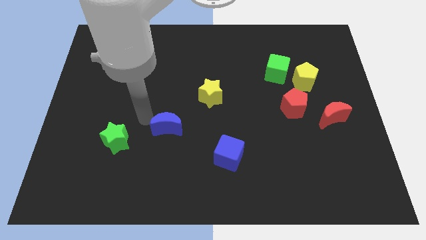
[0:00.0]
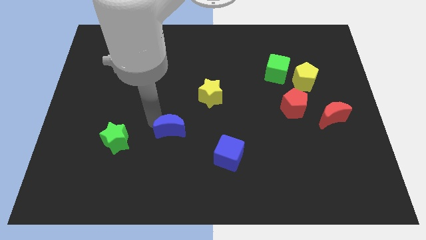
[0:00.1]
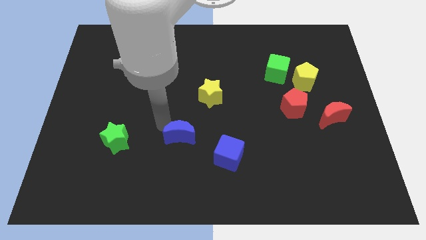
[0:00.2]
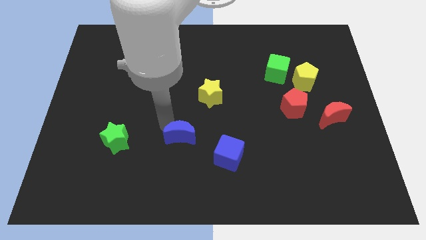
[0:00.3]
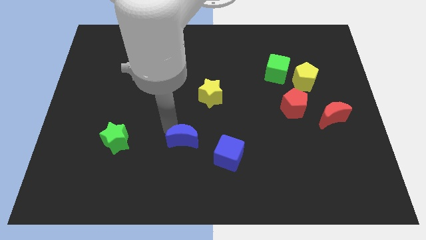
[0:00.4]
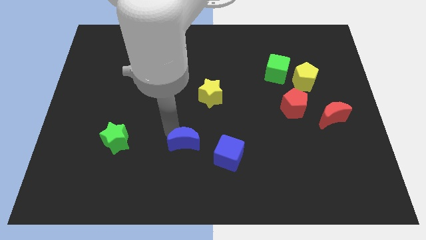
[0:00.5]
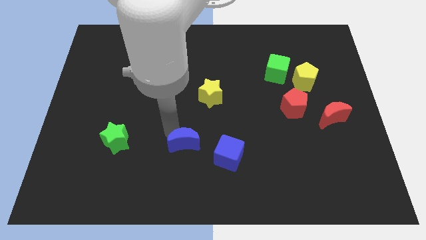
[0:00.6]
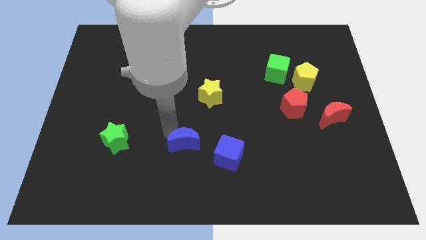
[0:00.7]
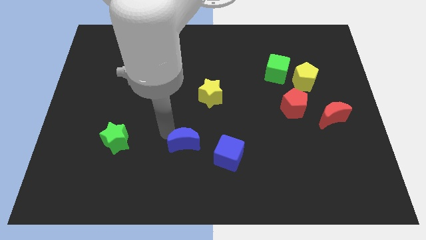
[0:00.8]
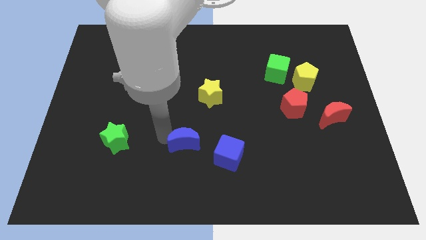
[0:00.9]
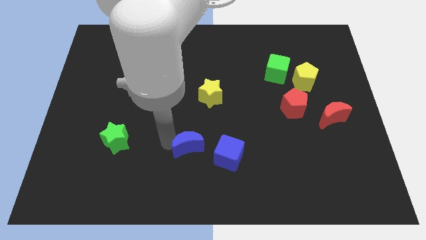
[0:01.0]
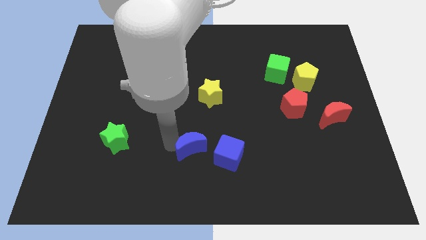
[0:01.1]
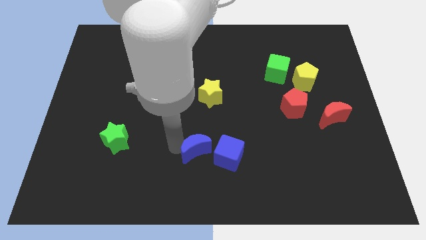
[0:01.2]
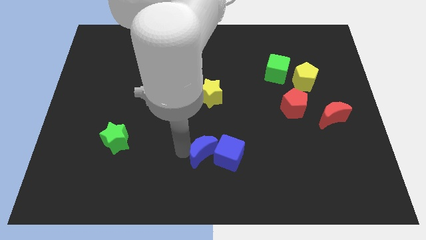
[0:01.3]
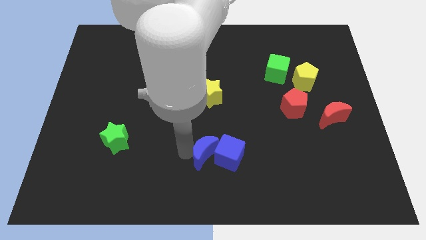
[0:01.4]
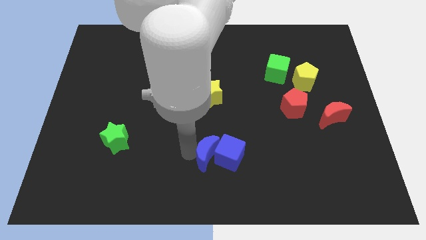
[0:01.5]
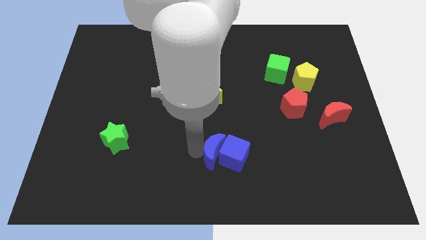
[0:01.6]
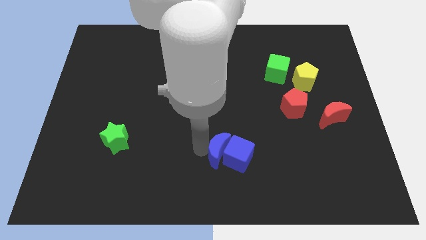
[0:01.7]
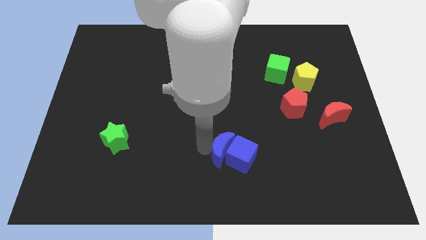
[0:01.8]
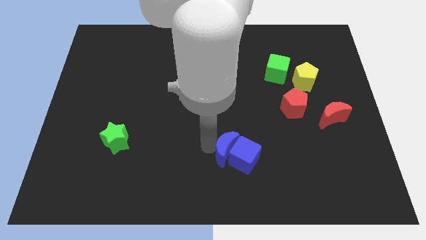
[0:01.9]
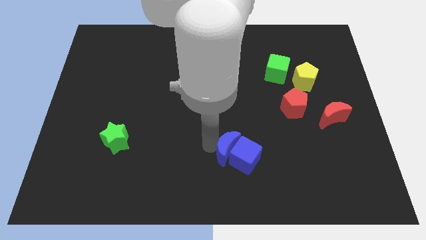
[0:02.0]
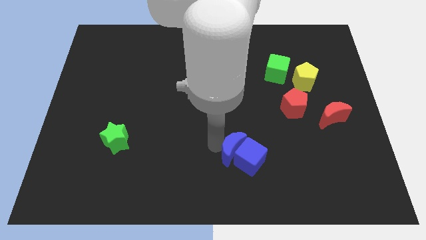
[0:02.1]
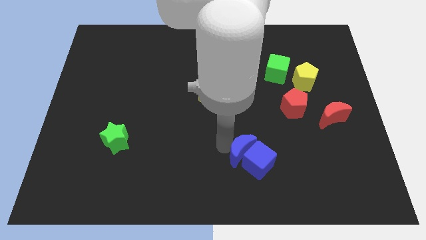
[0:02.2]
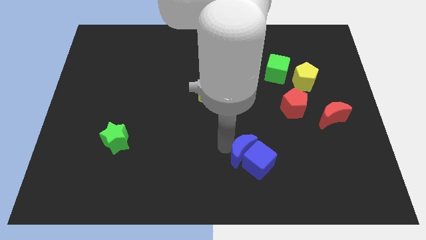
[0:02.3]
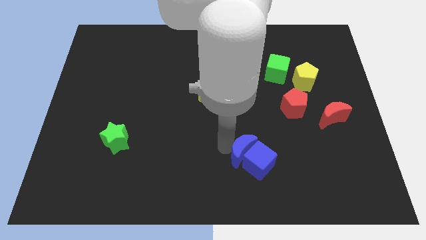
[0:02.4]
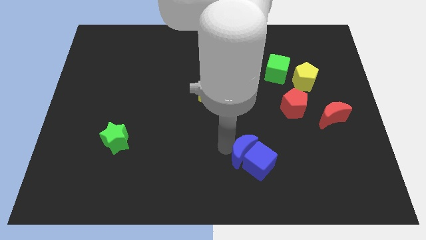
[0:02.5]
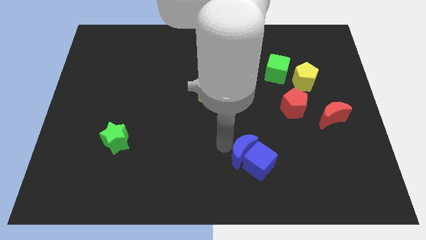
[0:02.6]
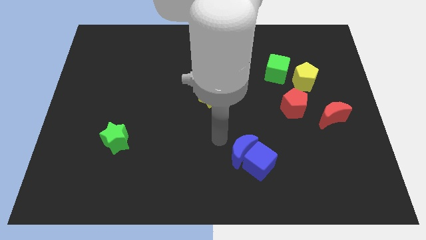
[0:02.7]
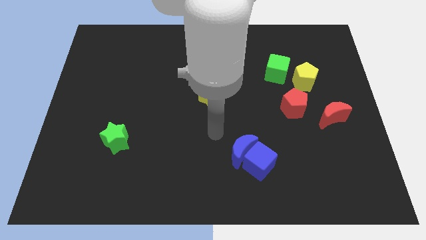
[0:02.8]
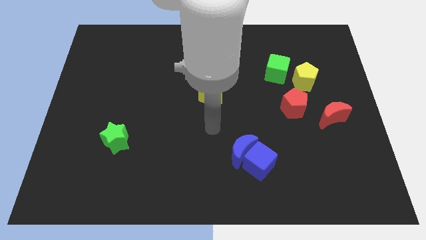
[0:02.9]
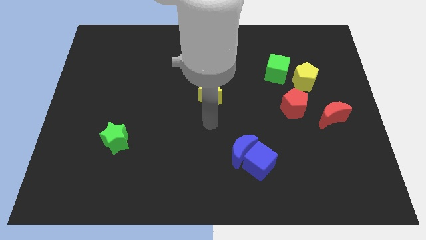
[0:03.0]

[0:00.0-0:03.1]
slightly push the blue crescent along with blue cube to the right

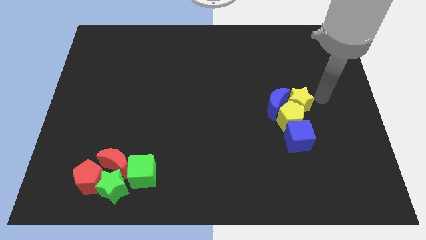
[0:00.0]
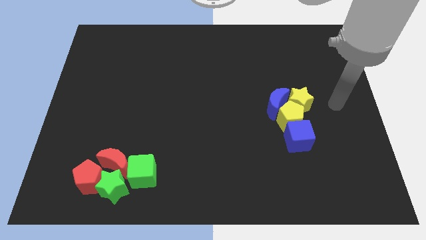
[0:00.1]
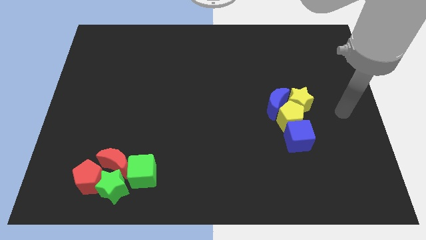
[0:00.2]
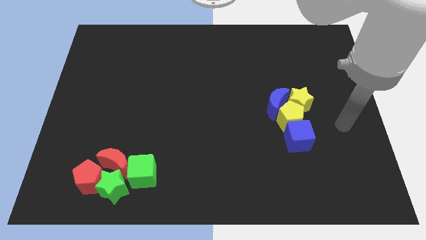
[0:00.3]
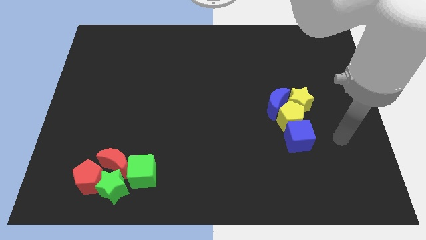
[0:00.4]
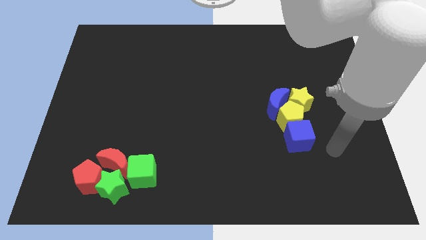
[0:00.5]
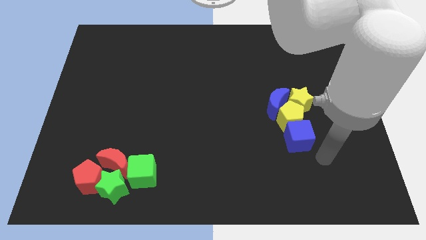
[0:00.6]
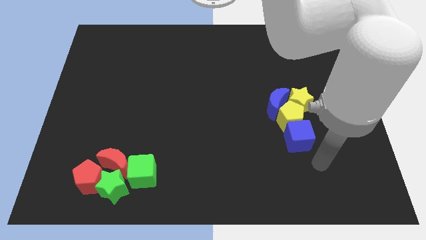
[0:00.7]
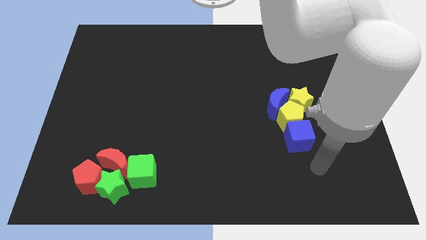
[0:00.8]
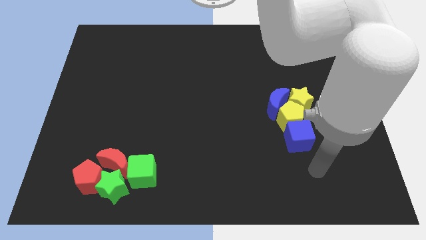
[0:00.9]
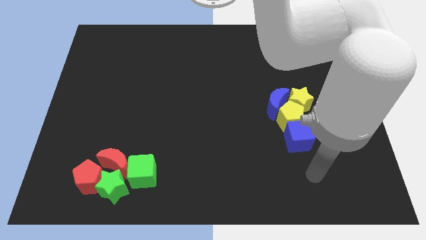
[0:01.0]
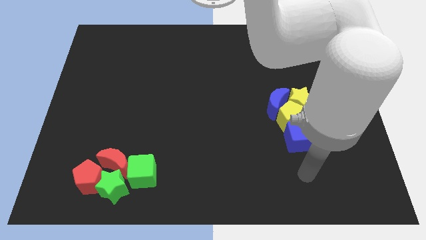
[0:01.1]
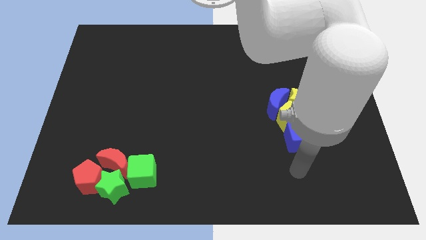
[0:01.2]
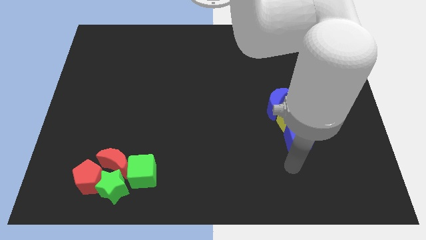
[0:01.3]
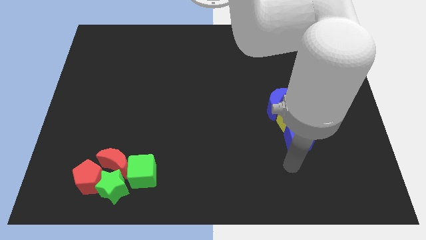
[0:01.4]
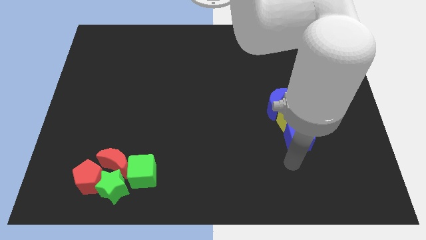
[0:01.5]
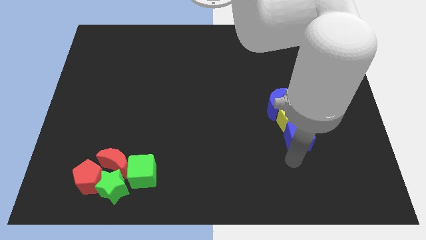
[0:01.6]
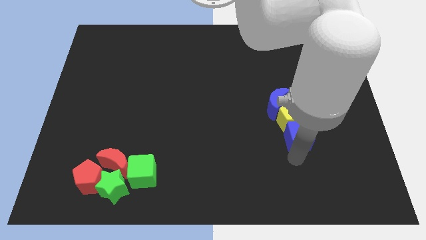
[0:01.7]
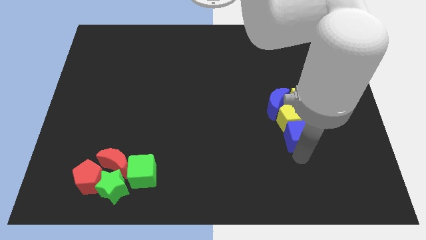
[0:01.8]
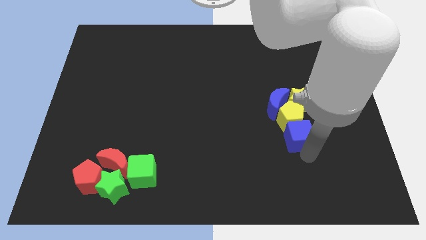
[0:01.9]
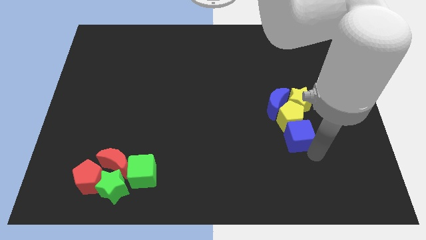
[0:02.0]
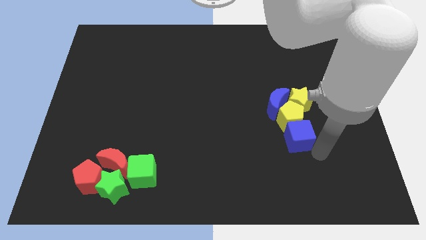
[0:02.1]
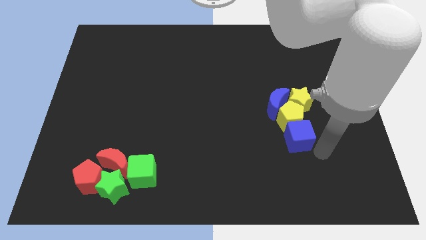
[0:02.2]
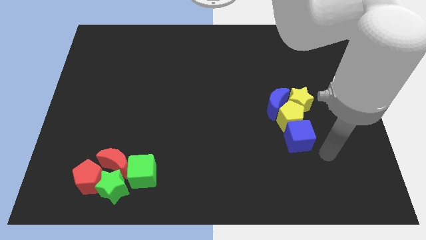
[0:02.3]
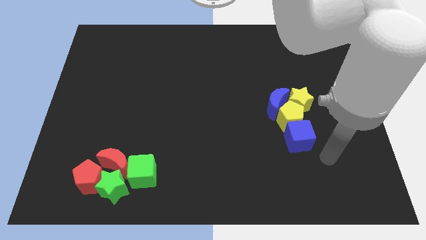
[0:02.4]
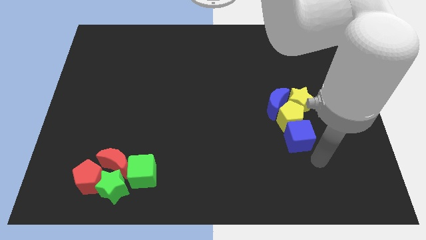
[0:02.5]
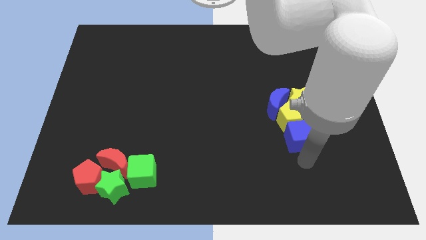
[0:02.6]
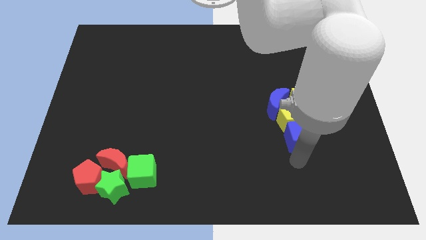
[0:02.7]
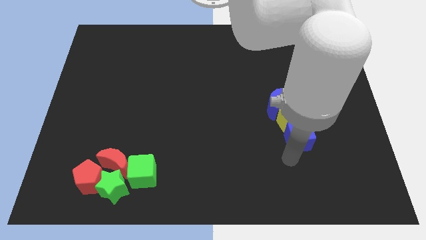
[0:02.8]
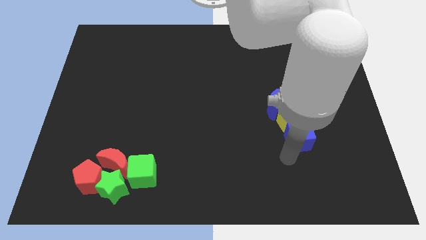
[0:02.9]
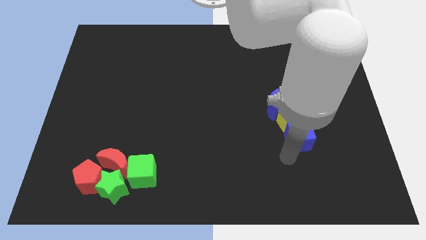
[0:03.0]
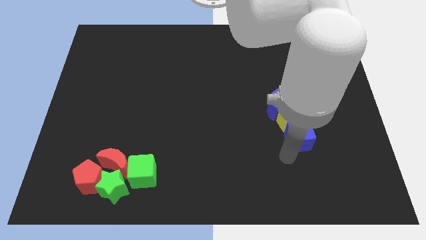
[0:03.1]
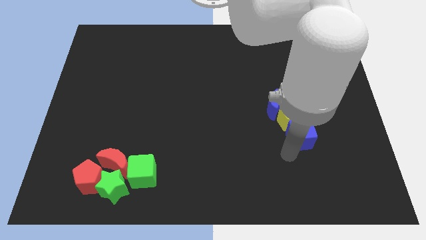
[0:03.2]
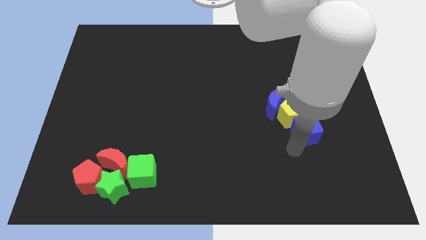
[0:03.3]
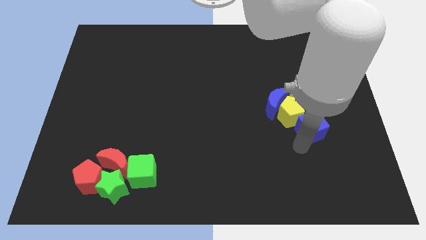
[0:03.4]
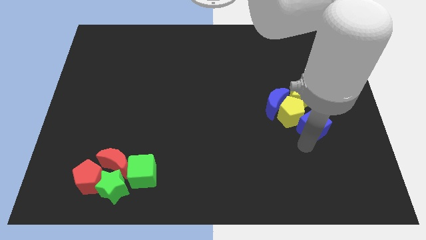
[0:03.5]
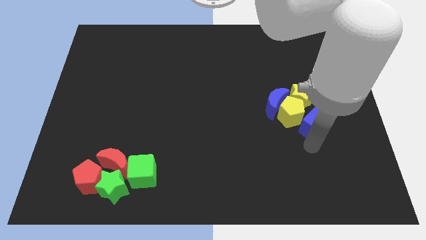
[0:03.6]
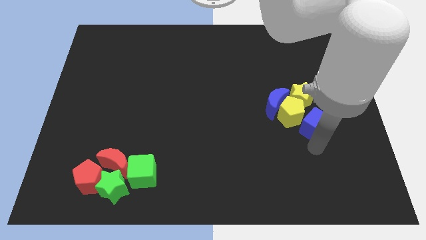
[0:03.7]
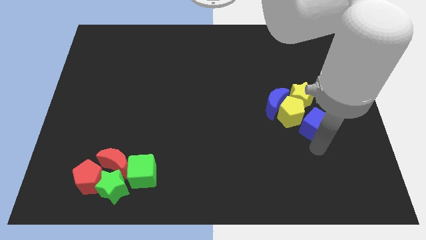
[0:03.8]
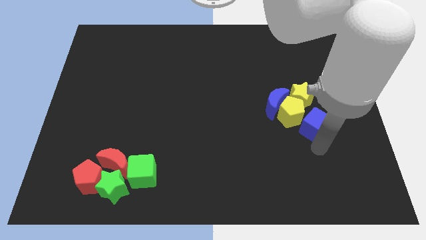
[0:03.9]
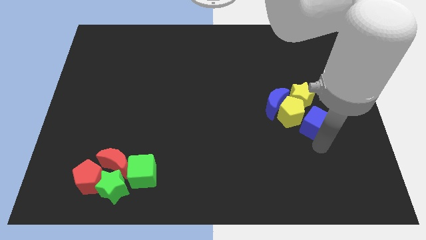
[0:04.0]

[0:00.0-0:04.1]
move the blue cube diagonally bottom right to the yellow pentagon

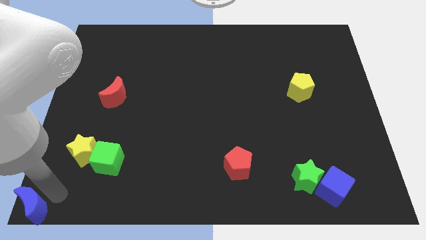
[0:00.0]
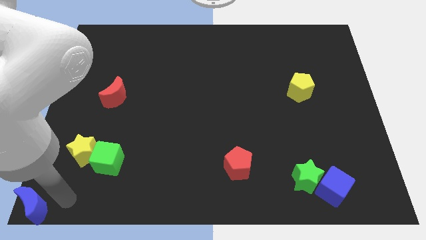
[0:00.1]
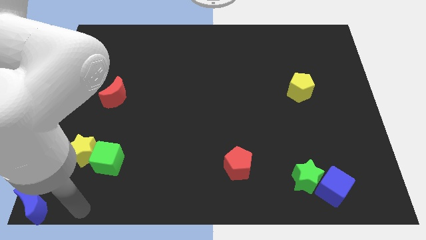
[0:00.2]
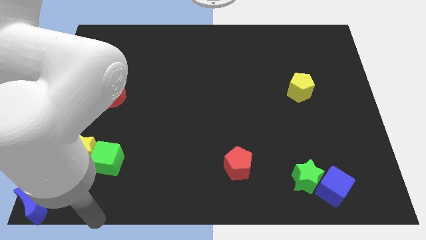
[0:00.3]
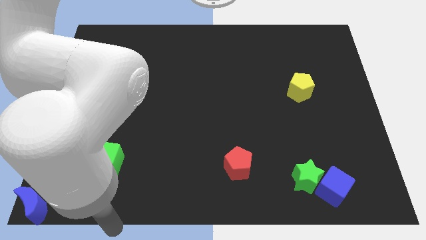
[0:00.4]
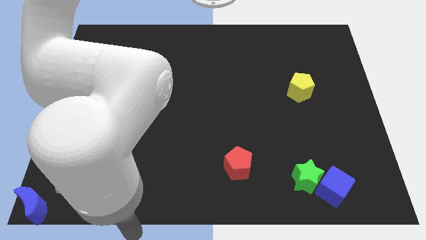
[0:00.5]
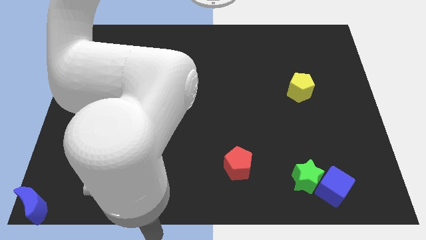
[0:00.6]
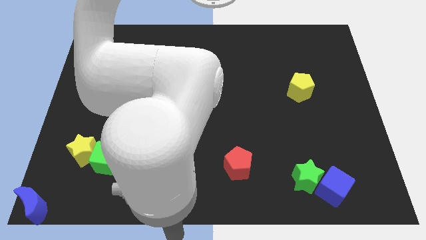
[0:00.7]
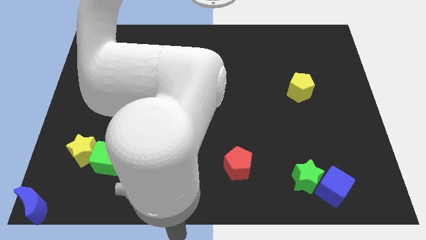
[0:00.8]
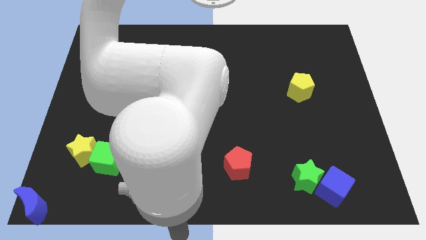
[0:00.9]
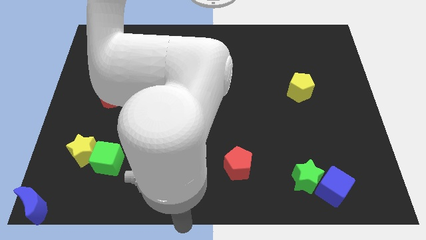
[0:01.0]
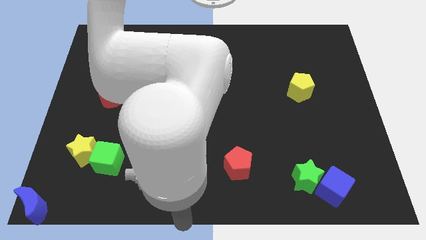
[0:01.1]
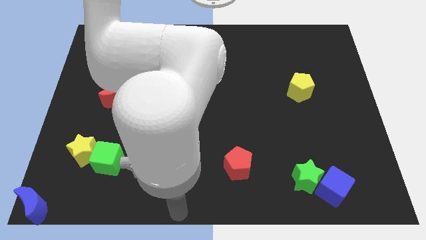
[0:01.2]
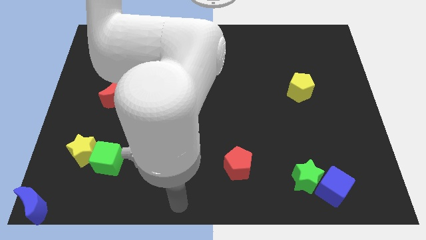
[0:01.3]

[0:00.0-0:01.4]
place your arm at the bottom center of the board

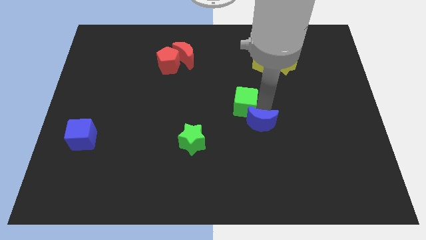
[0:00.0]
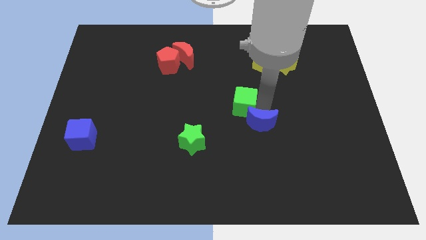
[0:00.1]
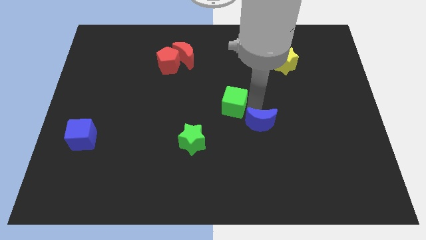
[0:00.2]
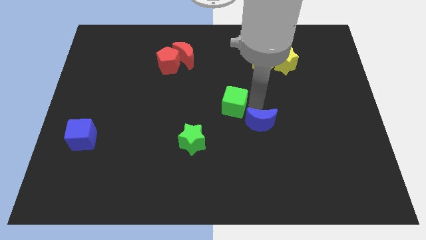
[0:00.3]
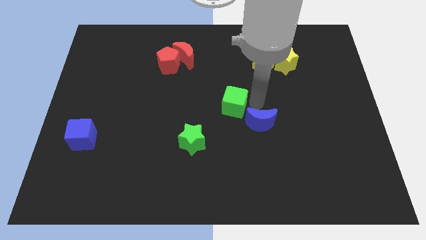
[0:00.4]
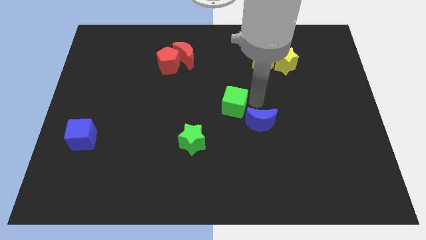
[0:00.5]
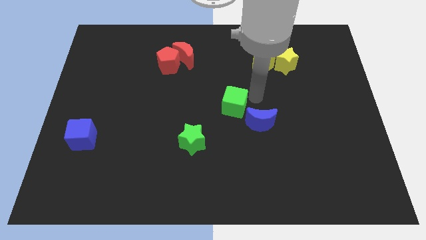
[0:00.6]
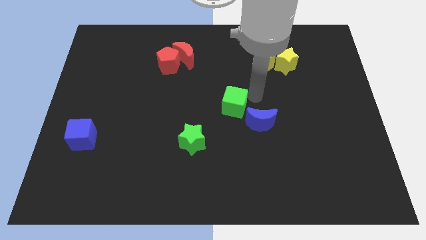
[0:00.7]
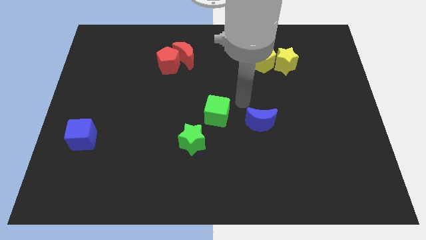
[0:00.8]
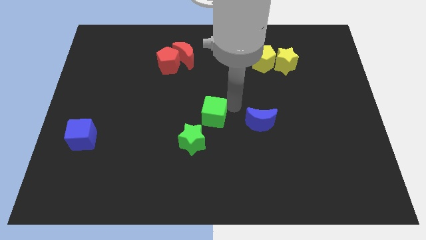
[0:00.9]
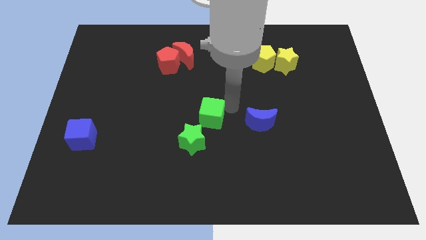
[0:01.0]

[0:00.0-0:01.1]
move the green cube to the left of the blue crescent
